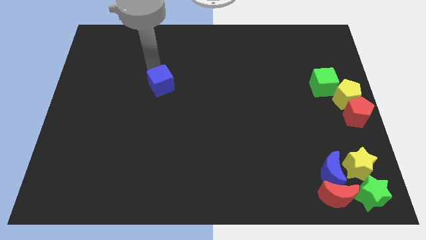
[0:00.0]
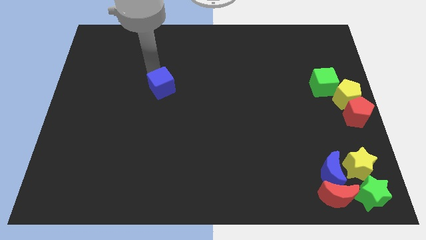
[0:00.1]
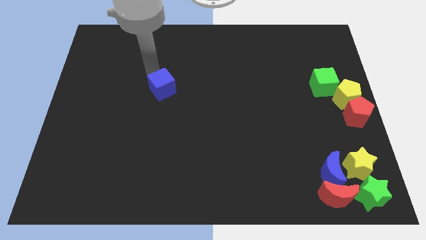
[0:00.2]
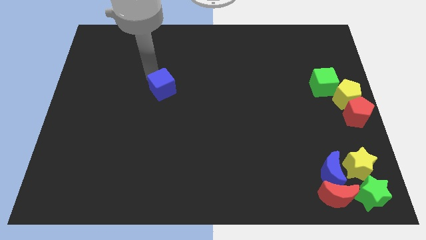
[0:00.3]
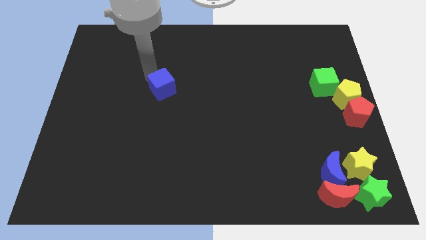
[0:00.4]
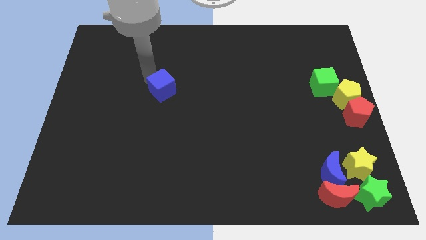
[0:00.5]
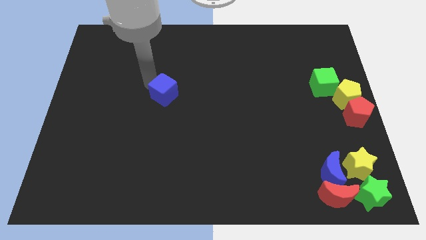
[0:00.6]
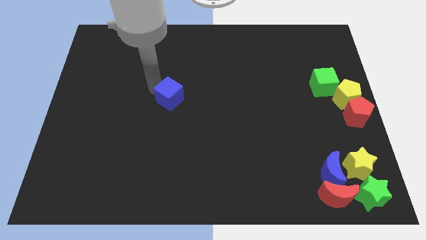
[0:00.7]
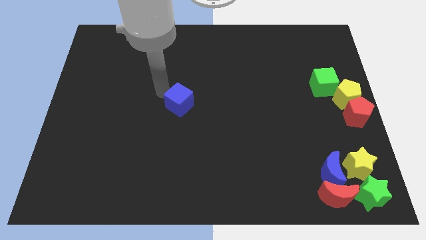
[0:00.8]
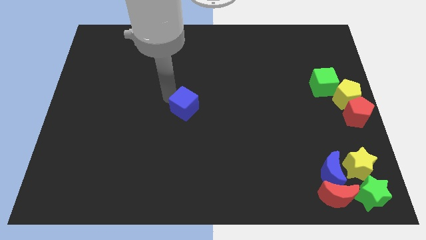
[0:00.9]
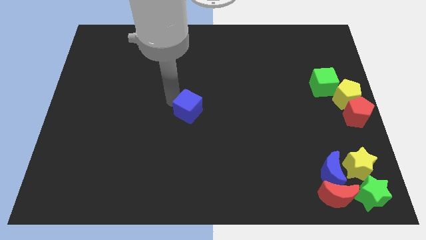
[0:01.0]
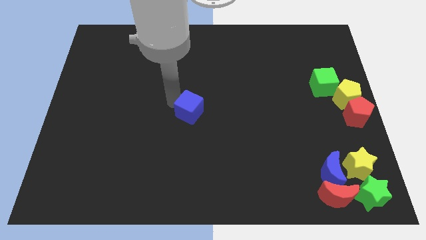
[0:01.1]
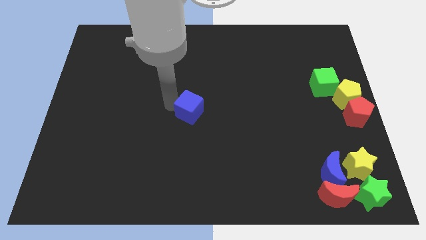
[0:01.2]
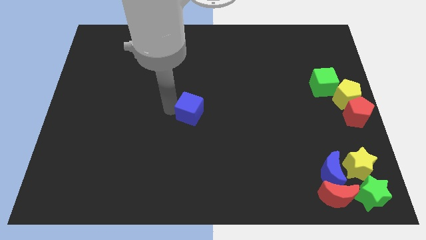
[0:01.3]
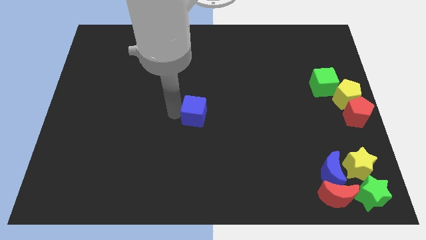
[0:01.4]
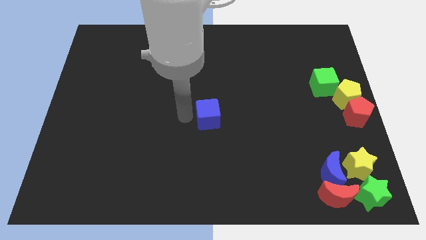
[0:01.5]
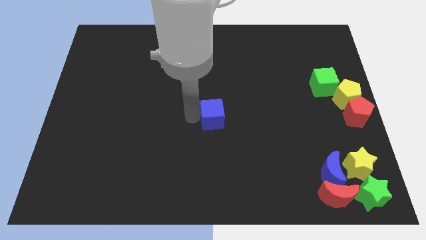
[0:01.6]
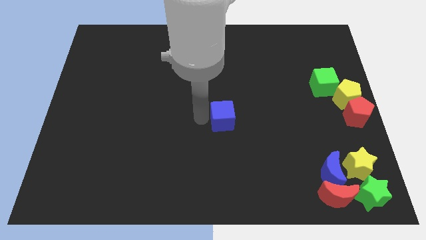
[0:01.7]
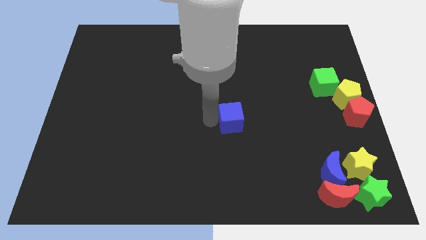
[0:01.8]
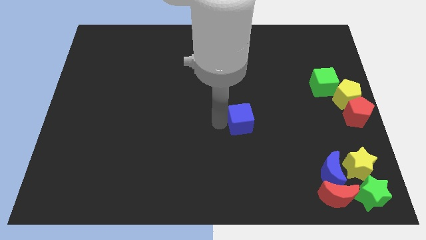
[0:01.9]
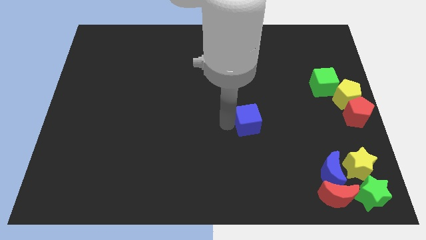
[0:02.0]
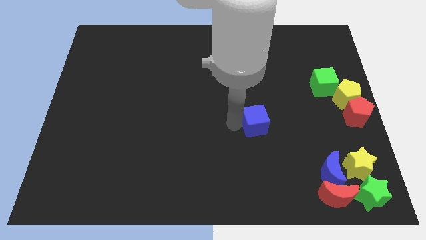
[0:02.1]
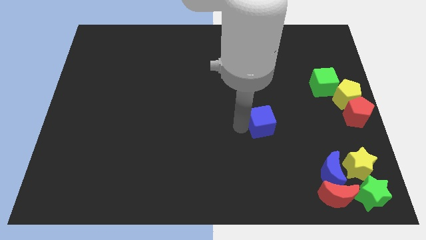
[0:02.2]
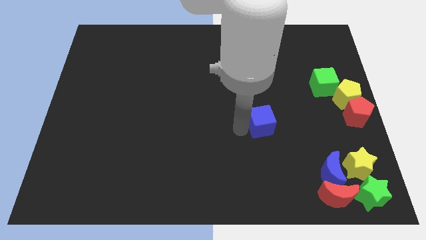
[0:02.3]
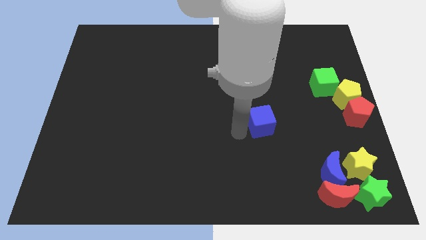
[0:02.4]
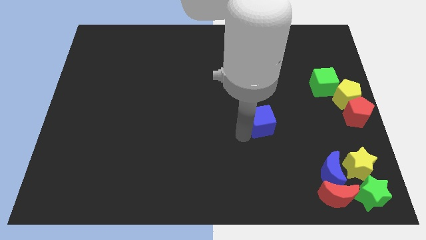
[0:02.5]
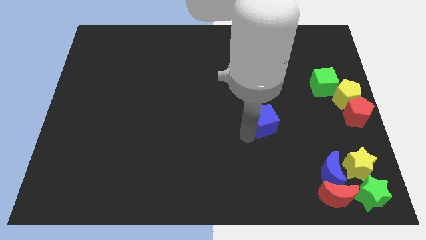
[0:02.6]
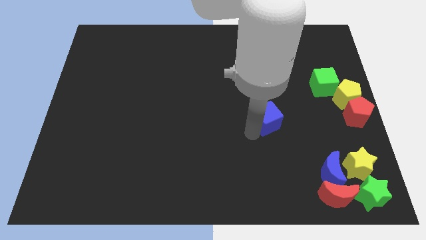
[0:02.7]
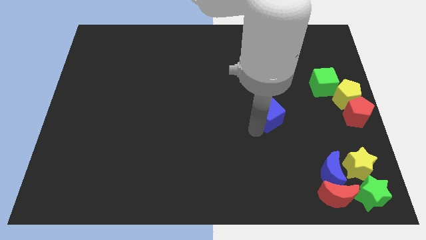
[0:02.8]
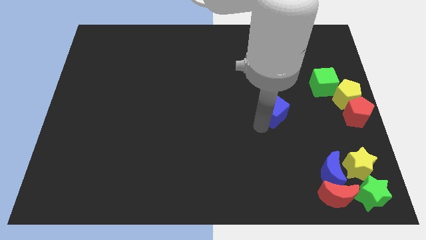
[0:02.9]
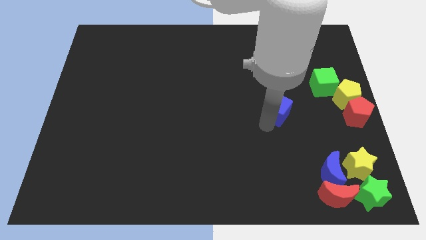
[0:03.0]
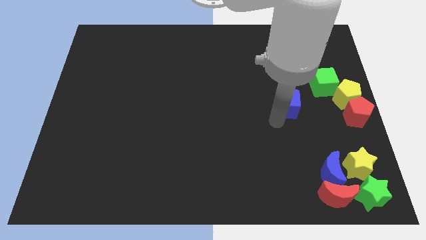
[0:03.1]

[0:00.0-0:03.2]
place the blue cube below to the green cube

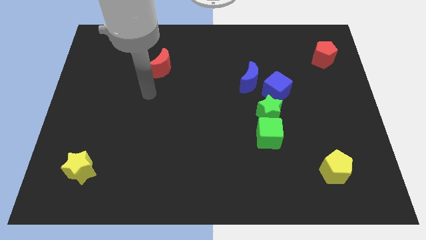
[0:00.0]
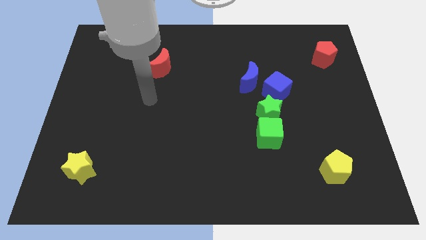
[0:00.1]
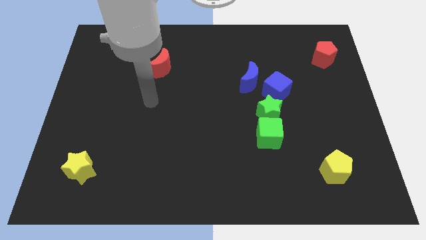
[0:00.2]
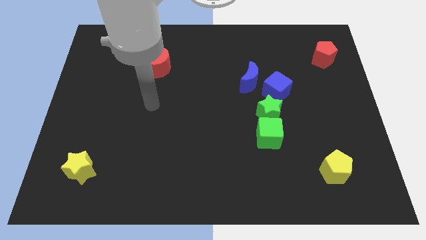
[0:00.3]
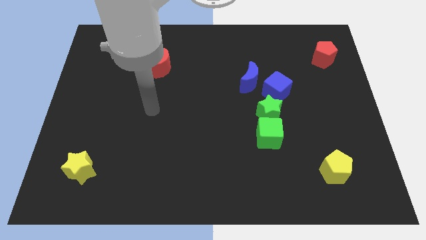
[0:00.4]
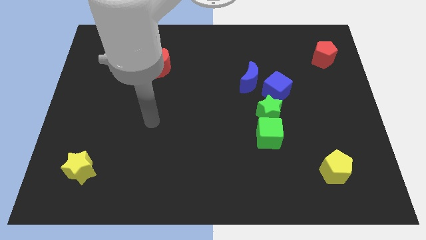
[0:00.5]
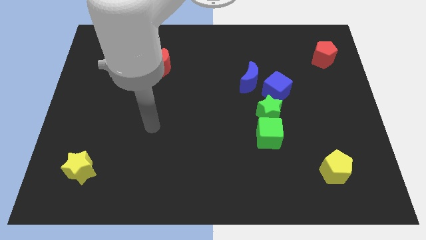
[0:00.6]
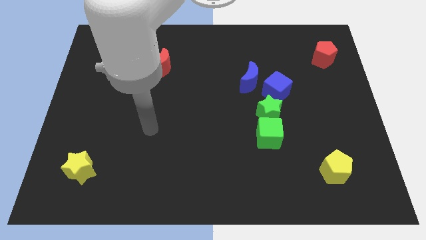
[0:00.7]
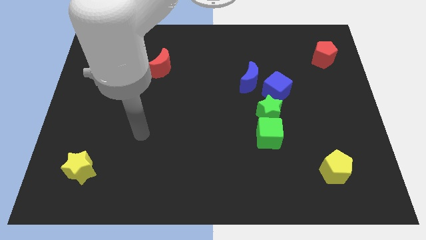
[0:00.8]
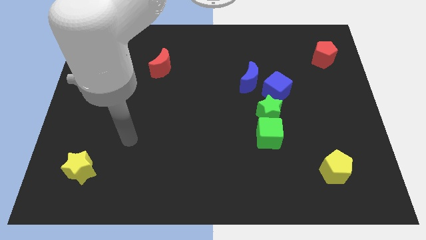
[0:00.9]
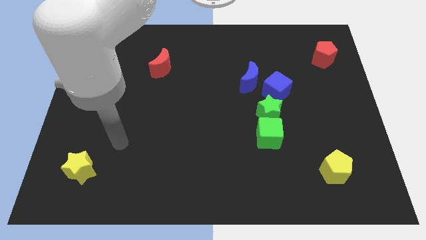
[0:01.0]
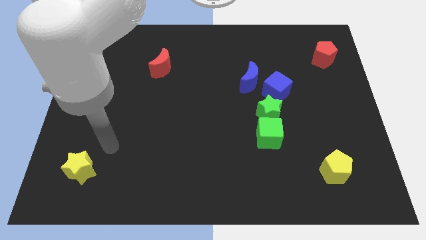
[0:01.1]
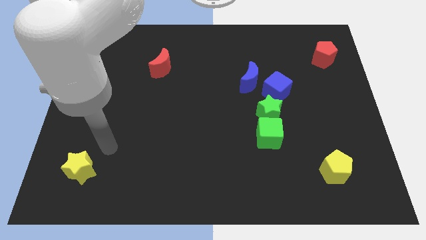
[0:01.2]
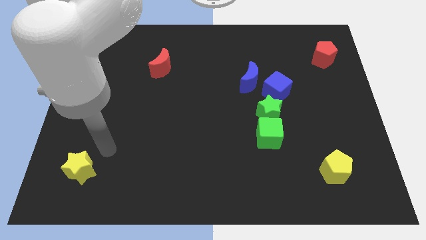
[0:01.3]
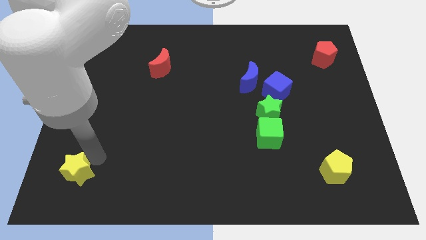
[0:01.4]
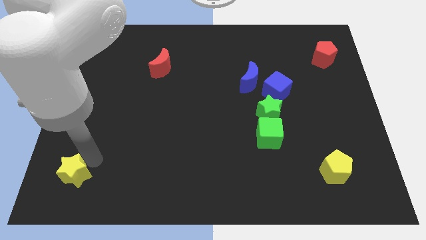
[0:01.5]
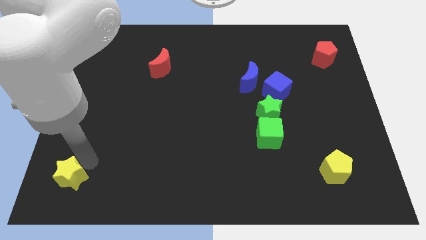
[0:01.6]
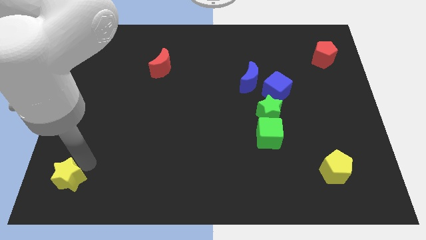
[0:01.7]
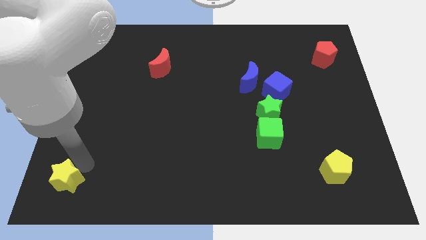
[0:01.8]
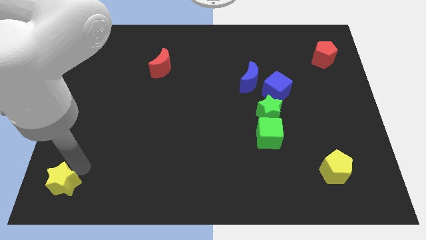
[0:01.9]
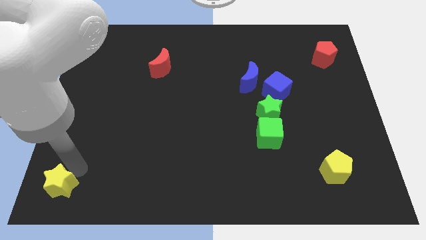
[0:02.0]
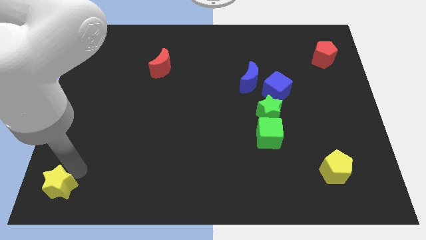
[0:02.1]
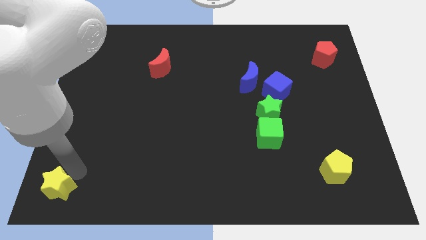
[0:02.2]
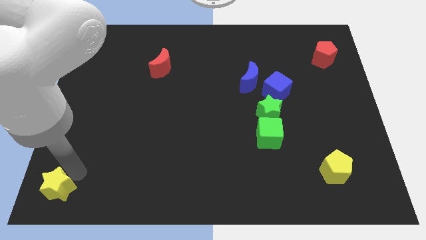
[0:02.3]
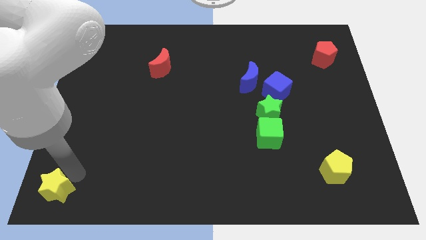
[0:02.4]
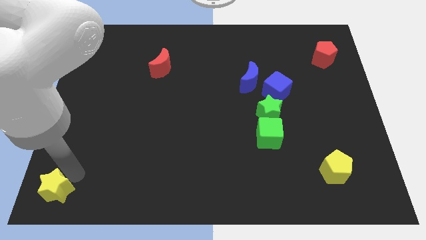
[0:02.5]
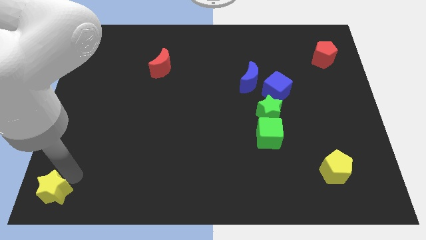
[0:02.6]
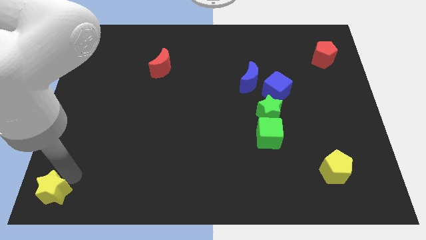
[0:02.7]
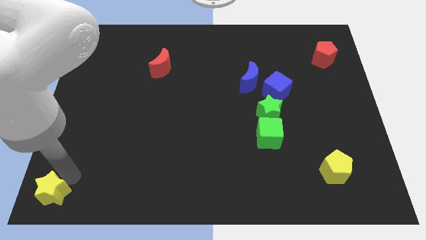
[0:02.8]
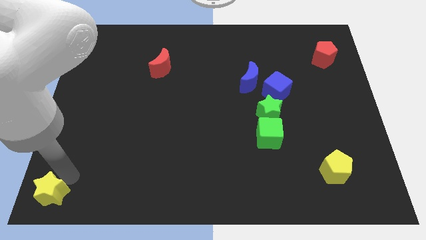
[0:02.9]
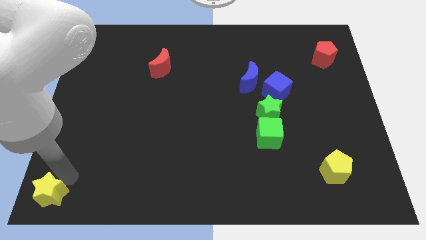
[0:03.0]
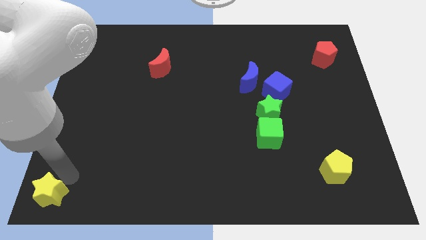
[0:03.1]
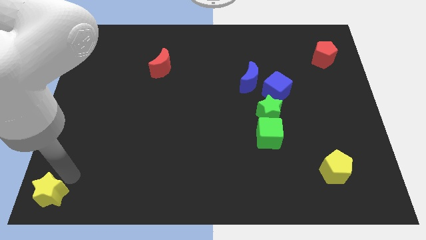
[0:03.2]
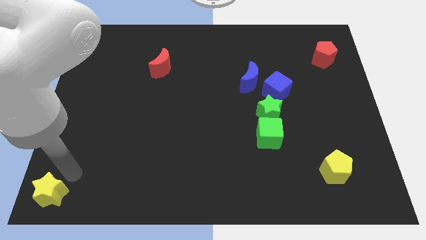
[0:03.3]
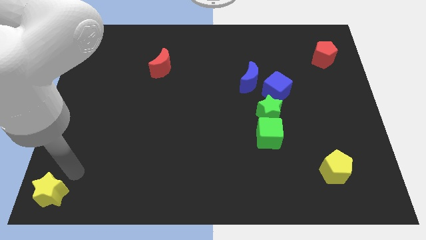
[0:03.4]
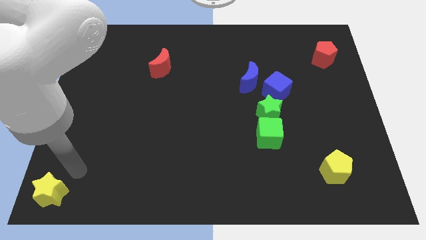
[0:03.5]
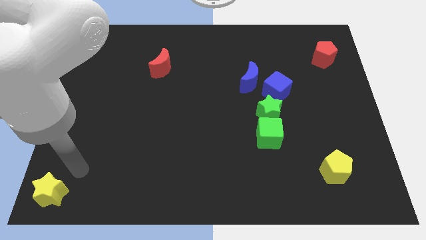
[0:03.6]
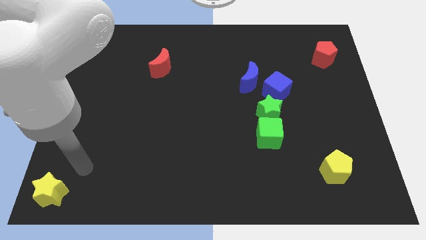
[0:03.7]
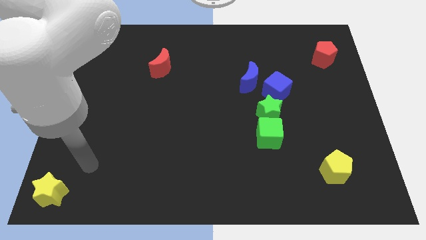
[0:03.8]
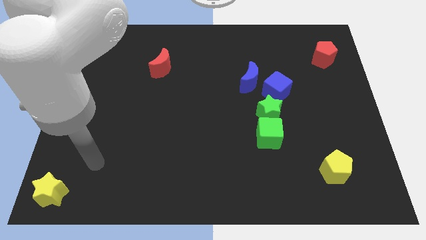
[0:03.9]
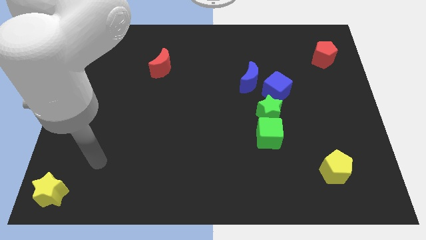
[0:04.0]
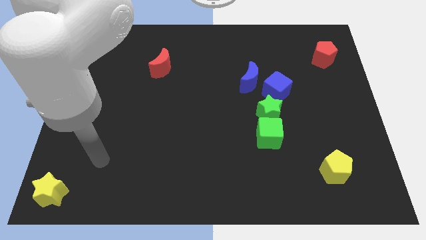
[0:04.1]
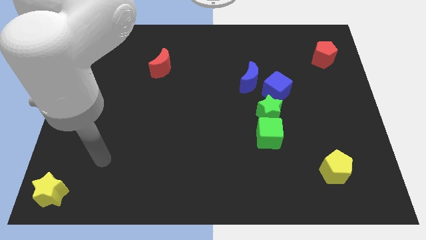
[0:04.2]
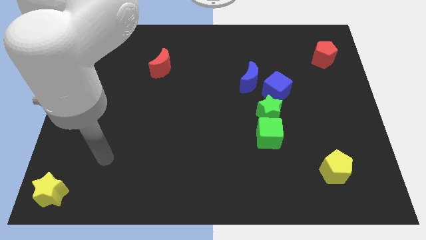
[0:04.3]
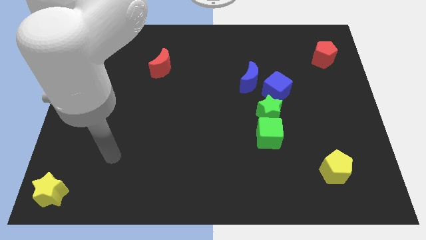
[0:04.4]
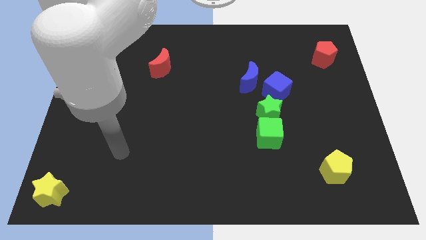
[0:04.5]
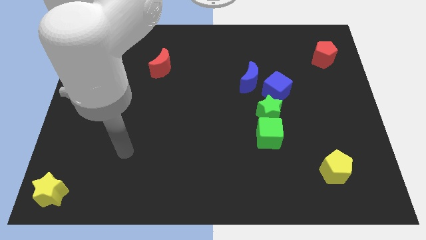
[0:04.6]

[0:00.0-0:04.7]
place yellow star to the bottom left of the board

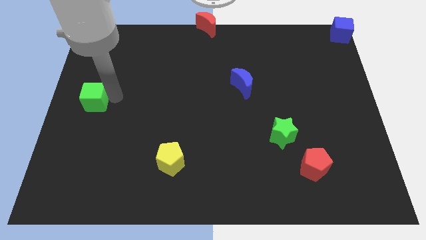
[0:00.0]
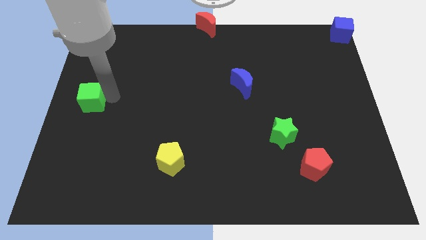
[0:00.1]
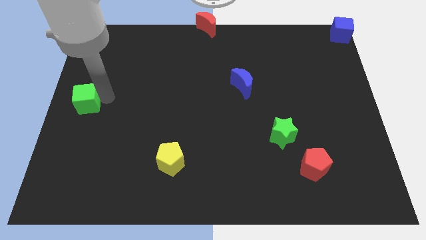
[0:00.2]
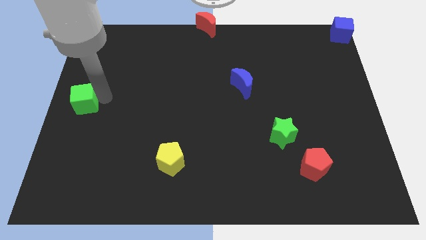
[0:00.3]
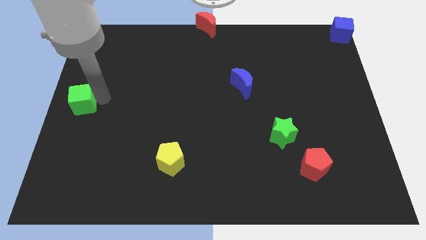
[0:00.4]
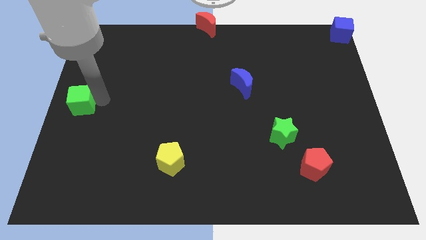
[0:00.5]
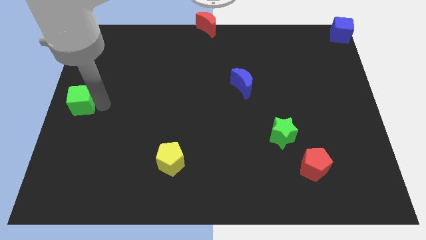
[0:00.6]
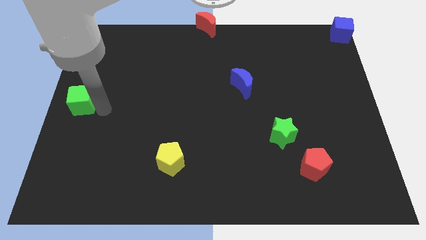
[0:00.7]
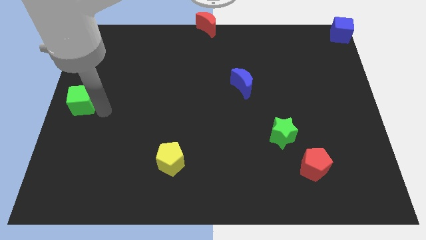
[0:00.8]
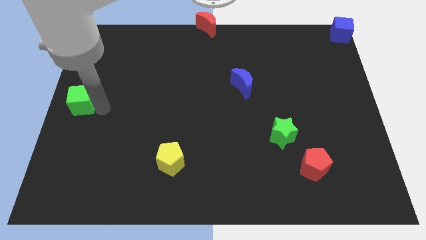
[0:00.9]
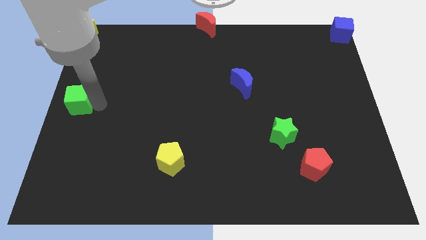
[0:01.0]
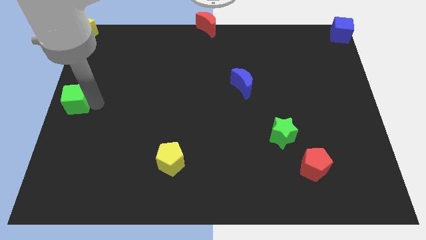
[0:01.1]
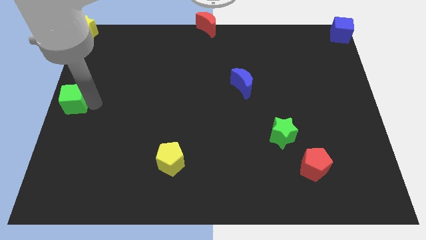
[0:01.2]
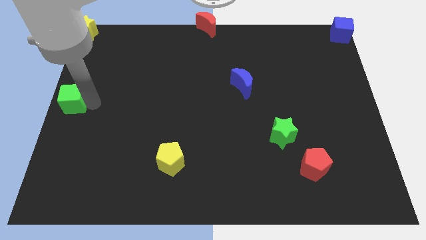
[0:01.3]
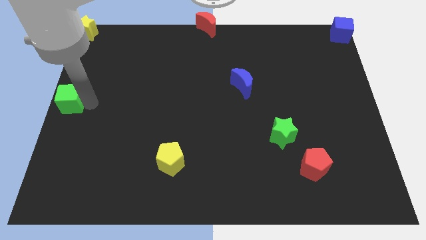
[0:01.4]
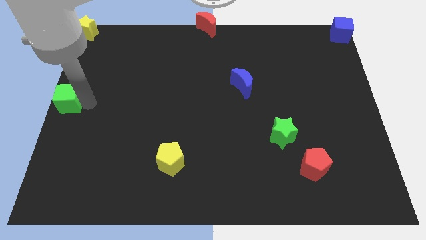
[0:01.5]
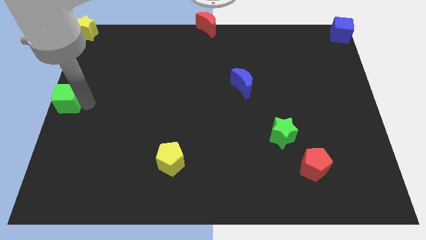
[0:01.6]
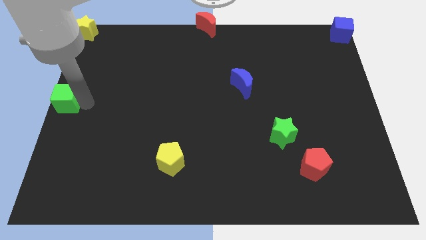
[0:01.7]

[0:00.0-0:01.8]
move the green cube to the left center of the board
